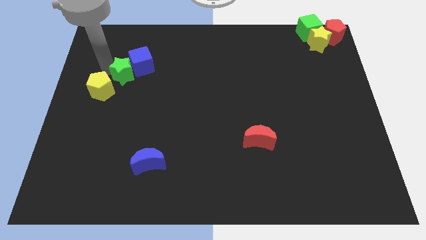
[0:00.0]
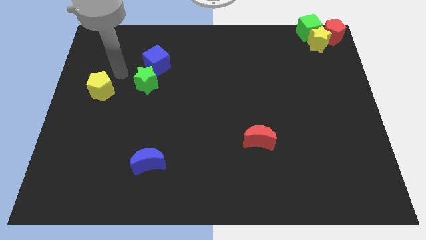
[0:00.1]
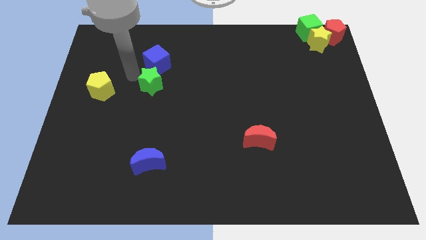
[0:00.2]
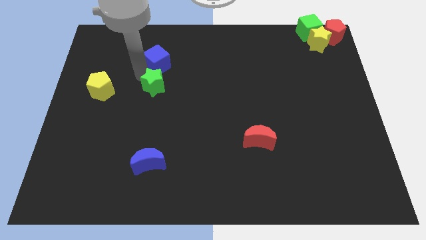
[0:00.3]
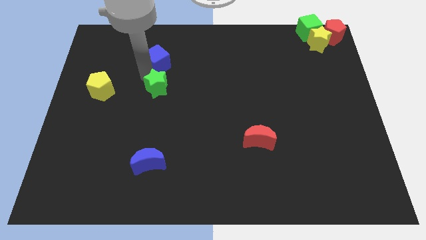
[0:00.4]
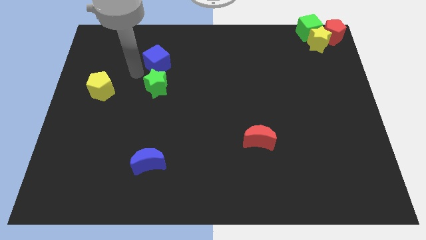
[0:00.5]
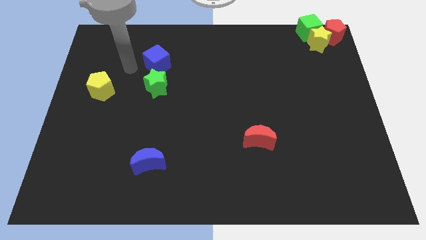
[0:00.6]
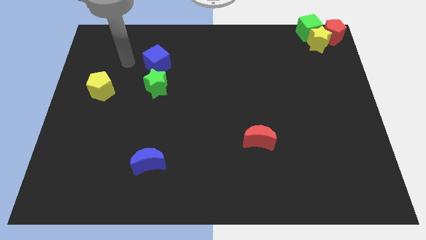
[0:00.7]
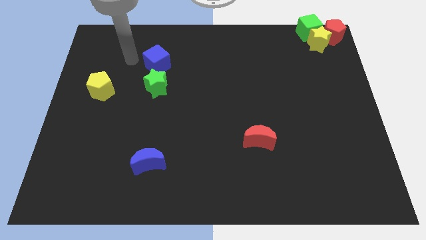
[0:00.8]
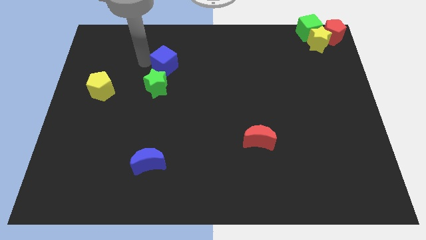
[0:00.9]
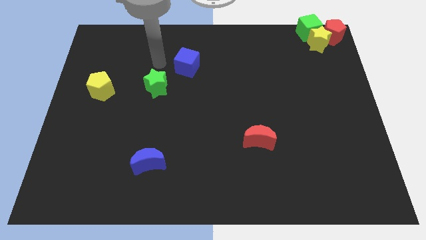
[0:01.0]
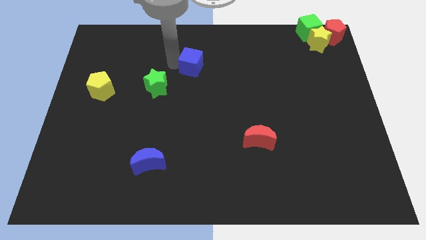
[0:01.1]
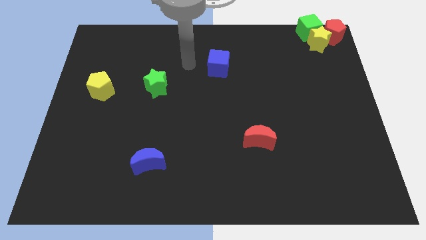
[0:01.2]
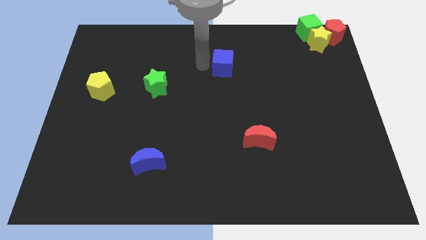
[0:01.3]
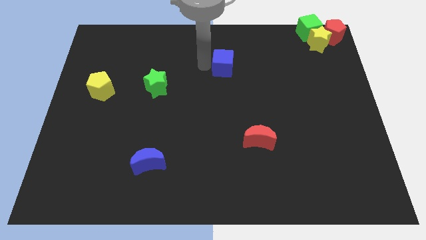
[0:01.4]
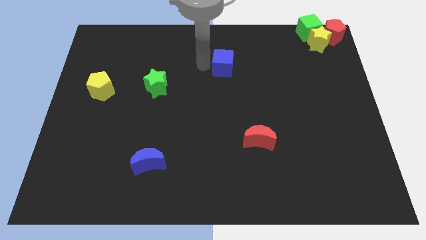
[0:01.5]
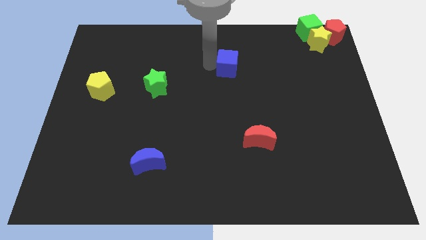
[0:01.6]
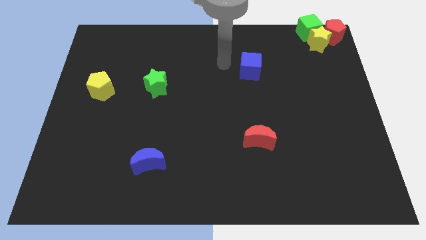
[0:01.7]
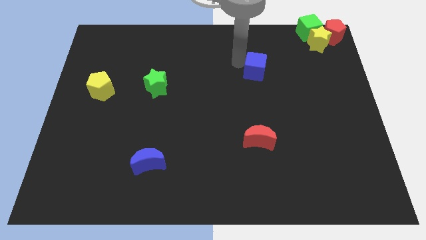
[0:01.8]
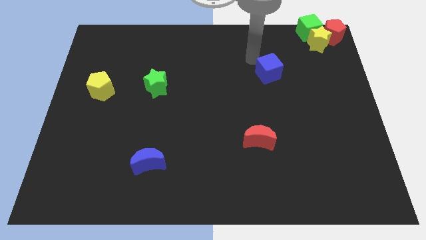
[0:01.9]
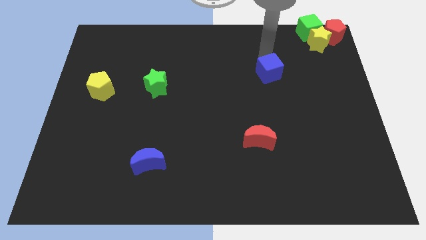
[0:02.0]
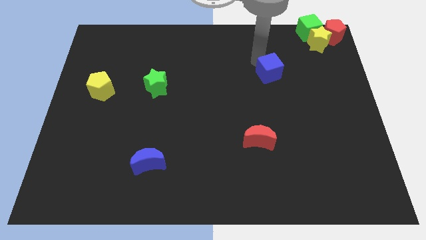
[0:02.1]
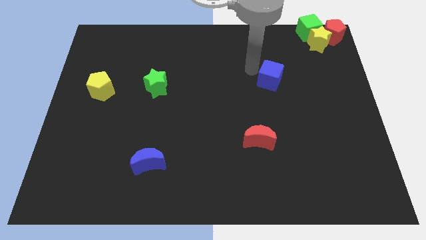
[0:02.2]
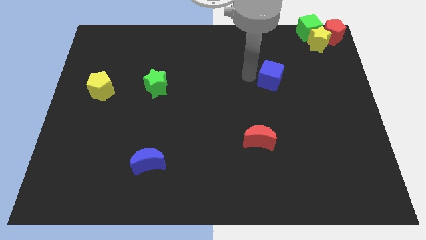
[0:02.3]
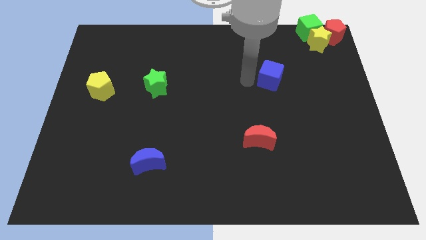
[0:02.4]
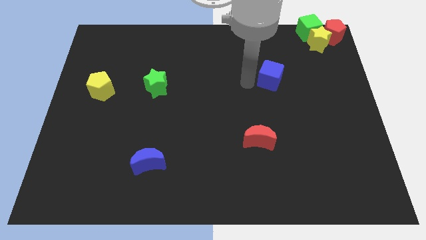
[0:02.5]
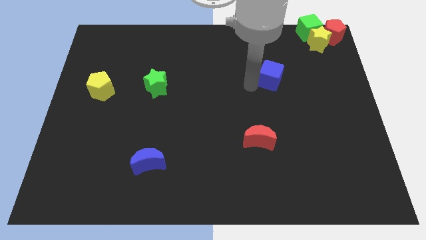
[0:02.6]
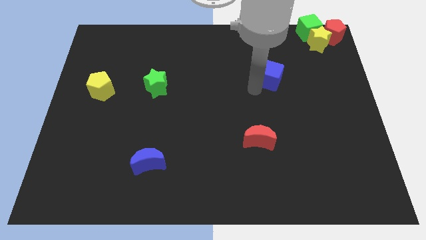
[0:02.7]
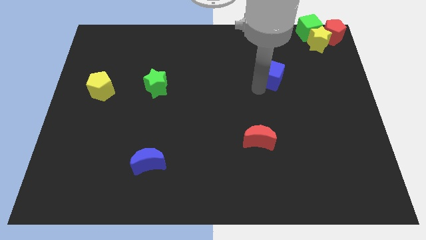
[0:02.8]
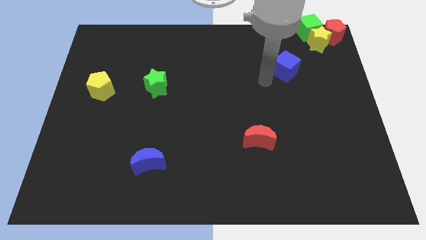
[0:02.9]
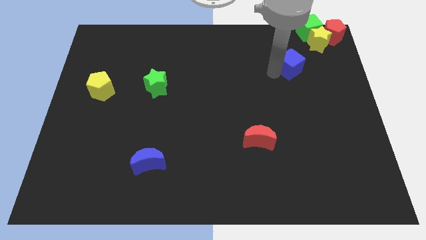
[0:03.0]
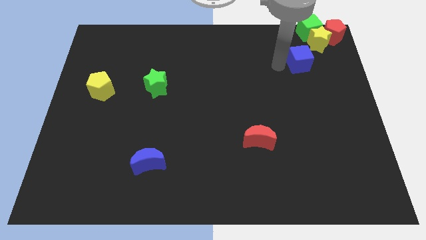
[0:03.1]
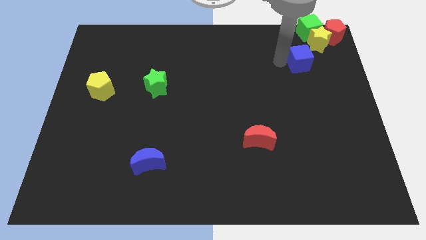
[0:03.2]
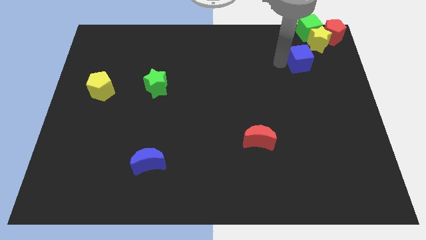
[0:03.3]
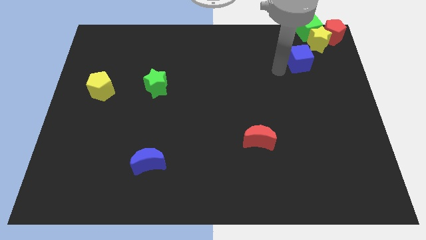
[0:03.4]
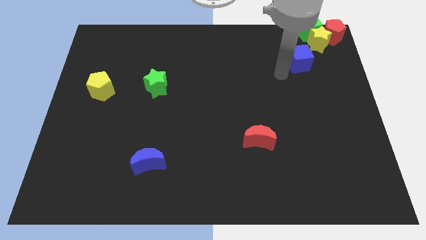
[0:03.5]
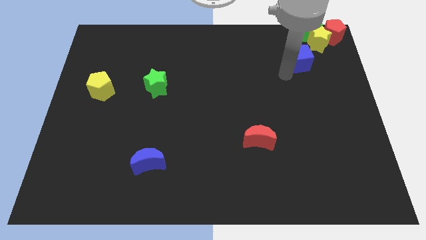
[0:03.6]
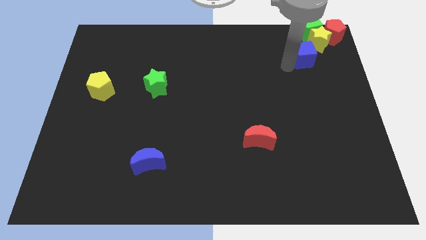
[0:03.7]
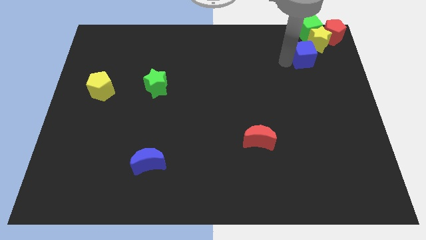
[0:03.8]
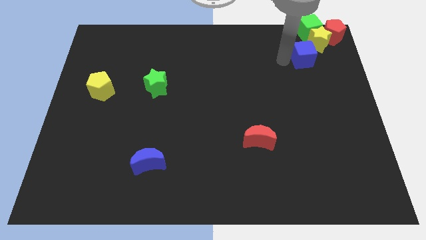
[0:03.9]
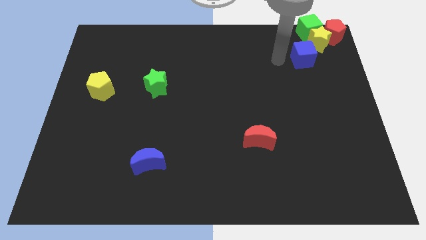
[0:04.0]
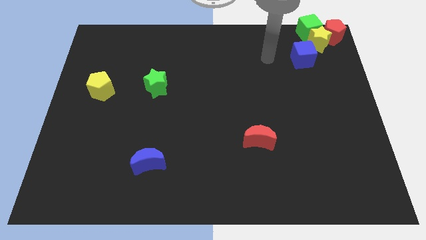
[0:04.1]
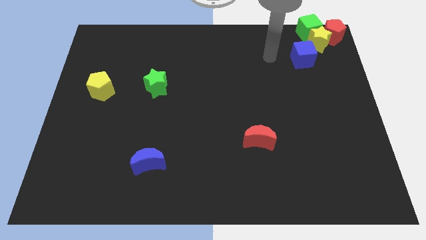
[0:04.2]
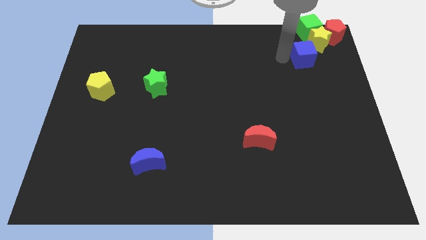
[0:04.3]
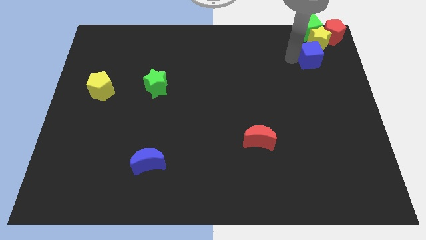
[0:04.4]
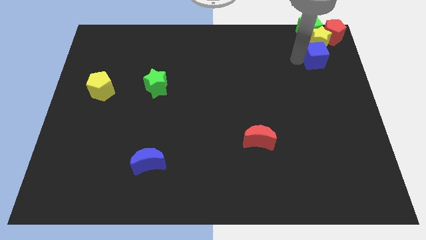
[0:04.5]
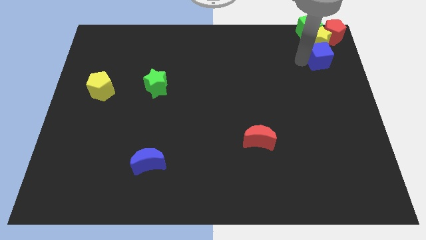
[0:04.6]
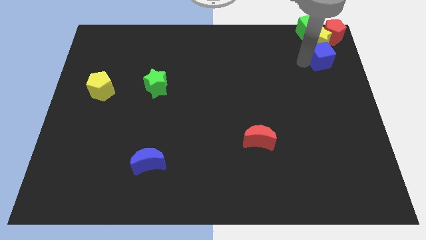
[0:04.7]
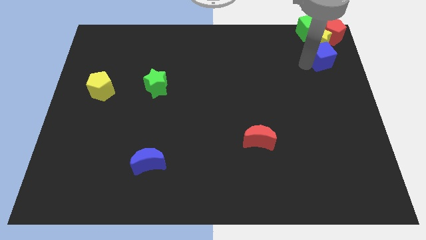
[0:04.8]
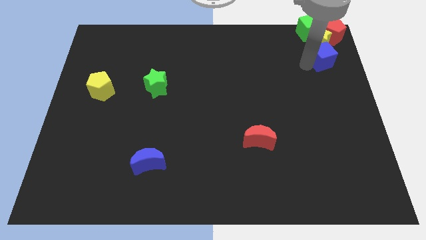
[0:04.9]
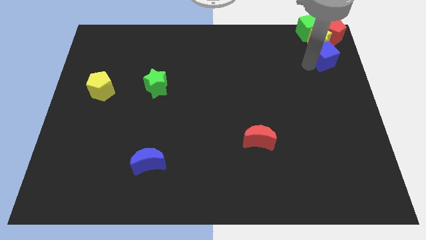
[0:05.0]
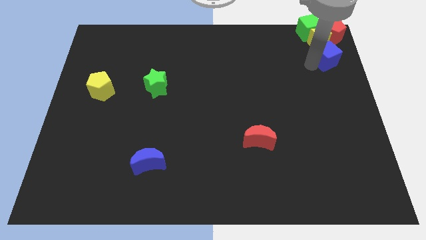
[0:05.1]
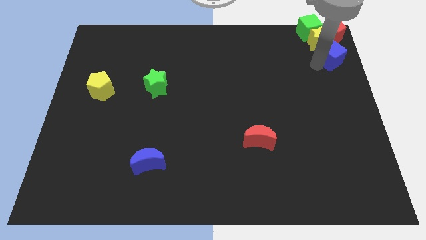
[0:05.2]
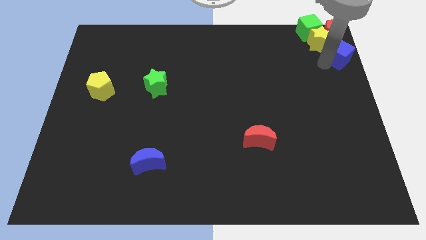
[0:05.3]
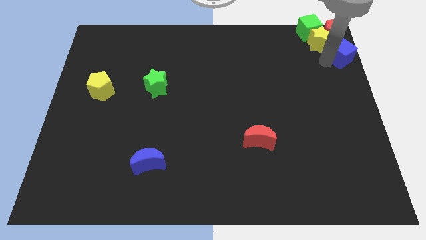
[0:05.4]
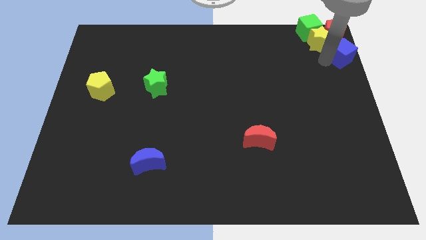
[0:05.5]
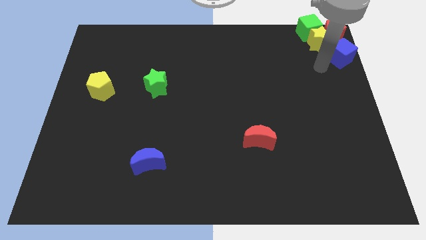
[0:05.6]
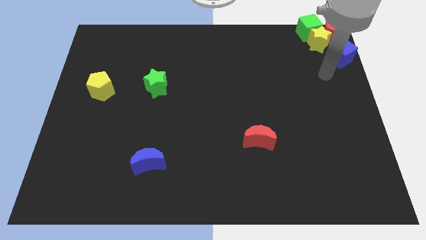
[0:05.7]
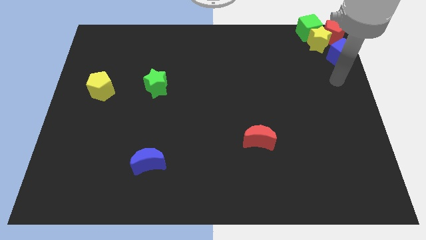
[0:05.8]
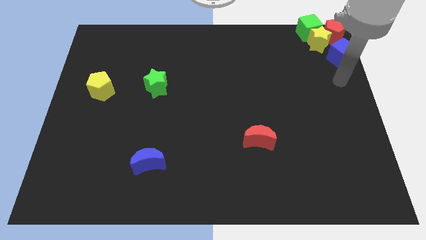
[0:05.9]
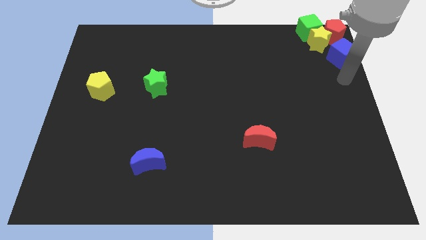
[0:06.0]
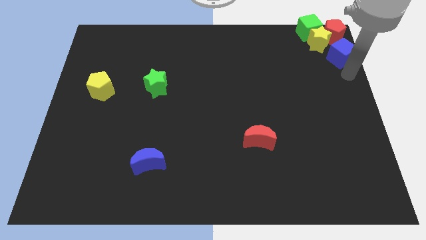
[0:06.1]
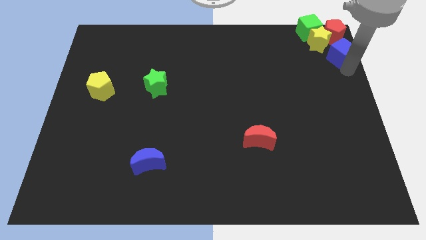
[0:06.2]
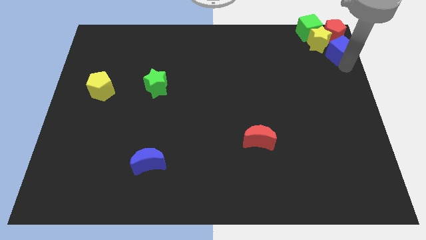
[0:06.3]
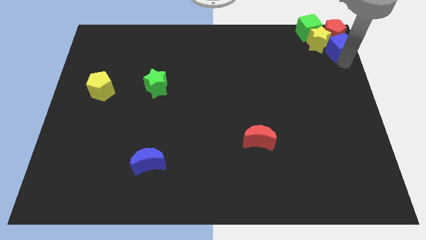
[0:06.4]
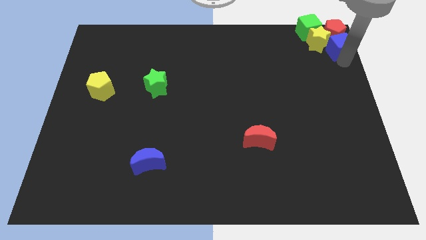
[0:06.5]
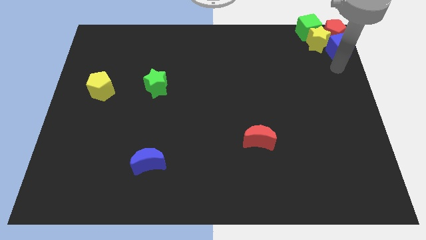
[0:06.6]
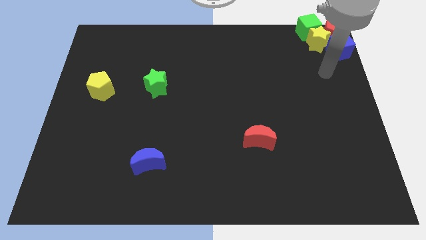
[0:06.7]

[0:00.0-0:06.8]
place the blue cube below the red pentagon

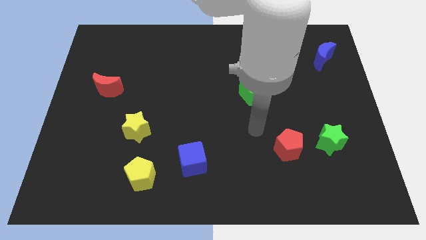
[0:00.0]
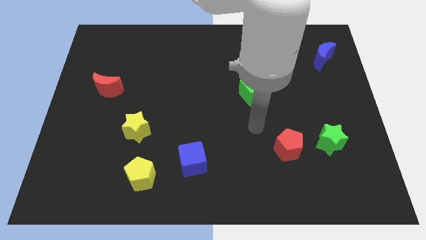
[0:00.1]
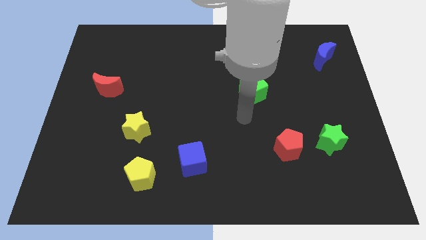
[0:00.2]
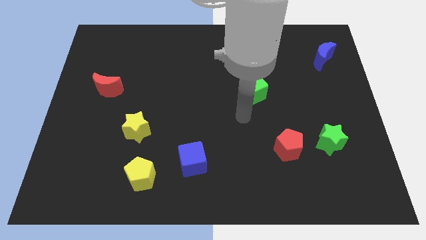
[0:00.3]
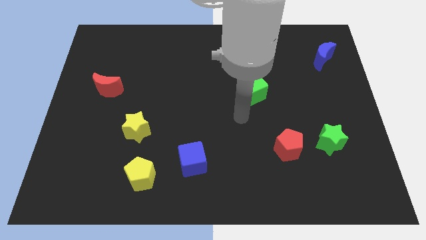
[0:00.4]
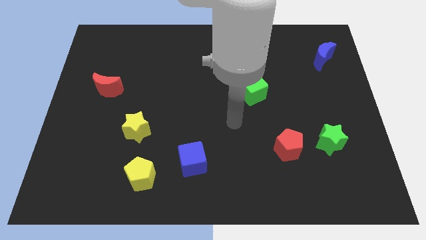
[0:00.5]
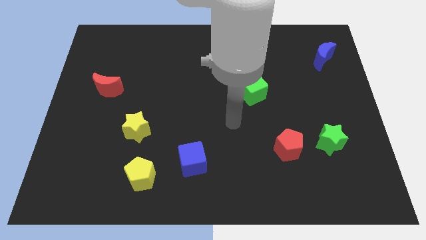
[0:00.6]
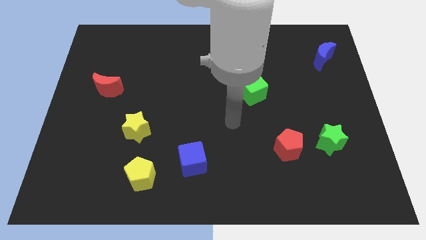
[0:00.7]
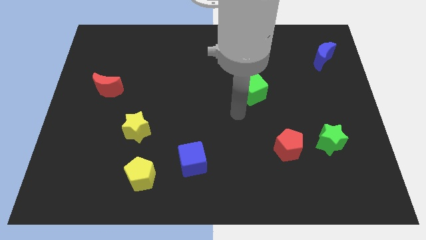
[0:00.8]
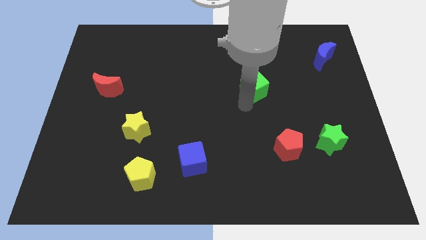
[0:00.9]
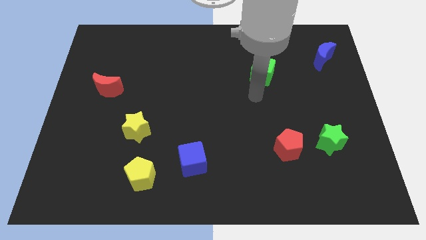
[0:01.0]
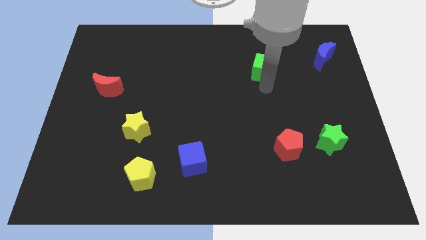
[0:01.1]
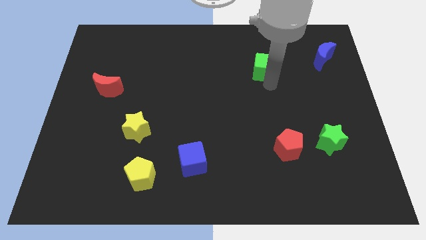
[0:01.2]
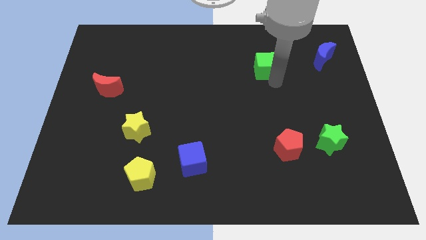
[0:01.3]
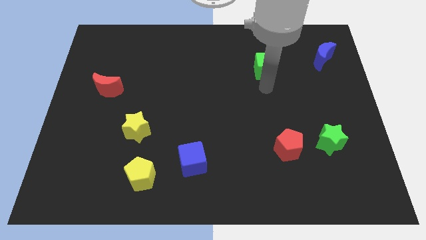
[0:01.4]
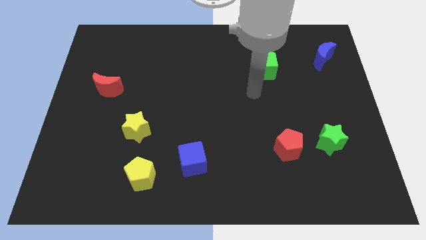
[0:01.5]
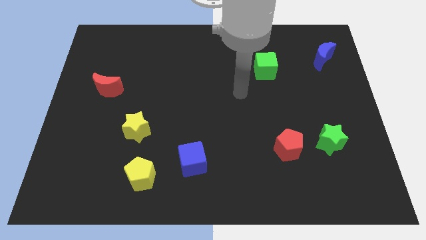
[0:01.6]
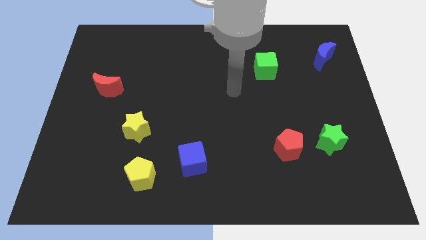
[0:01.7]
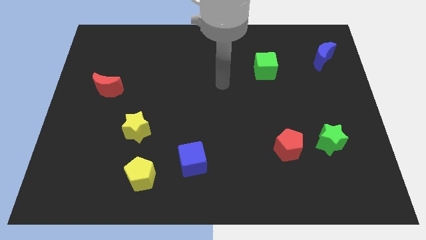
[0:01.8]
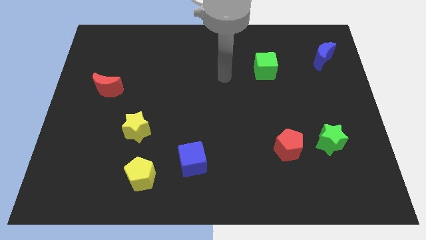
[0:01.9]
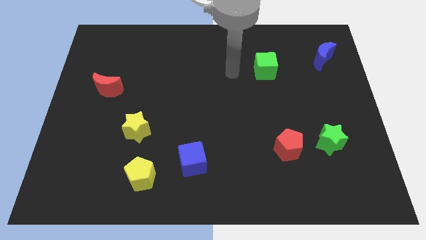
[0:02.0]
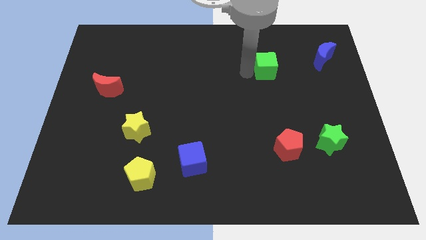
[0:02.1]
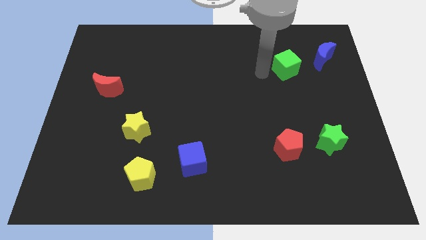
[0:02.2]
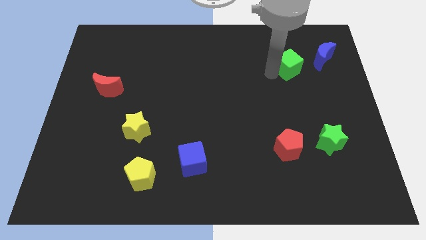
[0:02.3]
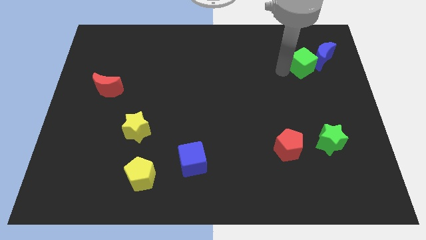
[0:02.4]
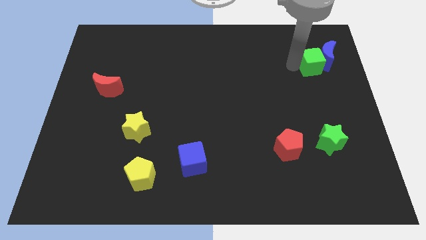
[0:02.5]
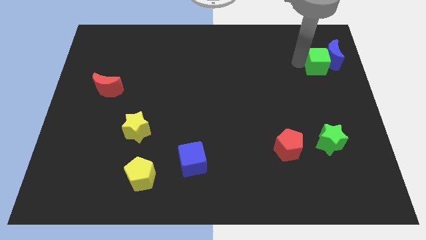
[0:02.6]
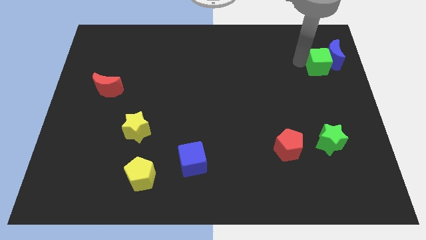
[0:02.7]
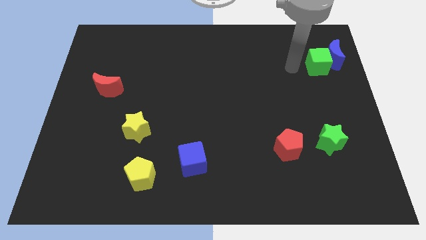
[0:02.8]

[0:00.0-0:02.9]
move the green cube into the blue moon
